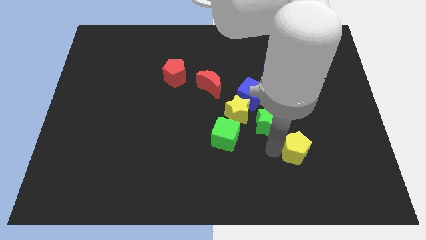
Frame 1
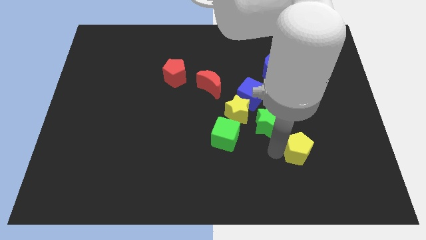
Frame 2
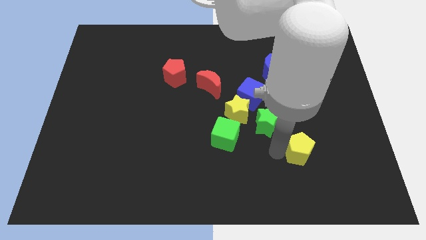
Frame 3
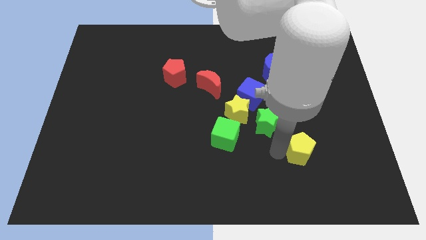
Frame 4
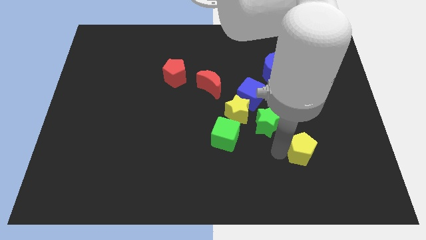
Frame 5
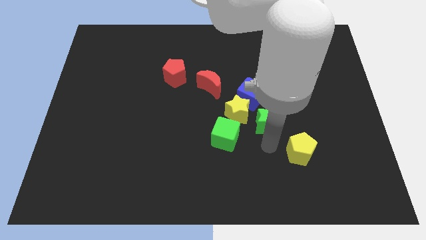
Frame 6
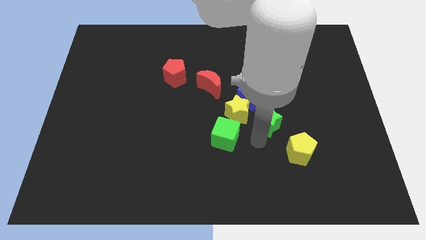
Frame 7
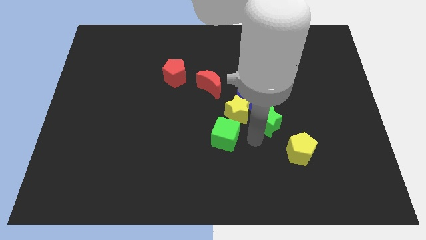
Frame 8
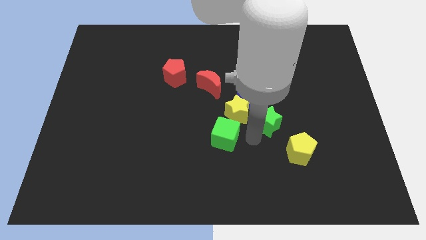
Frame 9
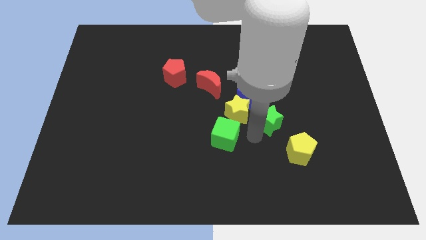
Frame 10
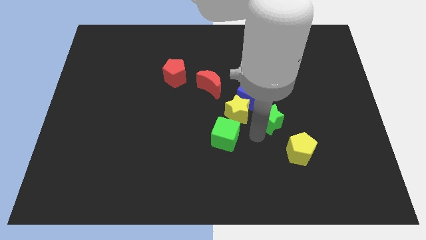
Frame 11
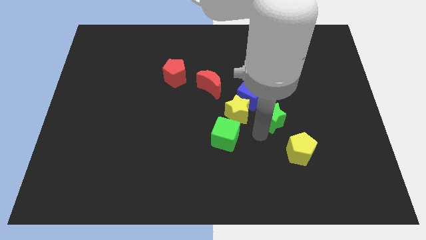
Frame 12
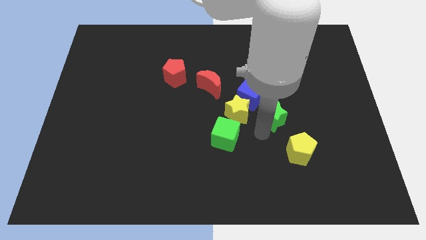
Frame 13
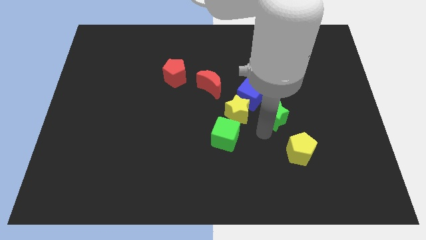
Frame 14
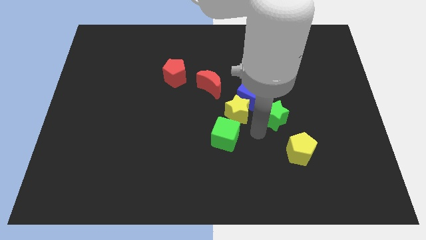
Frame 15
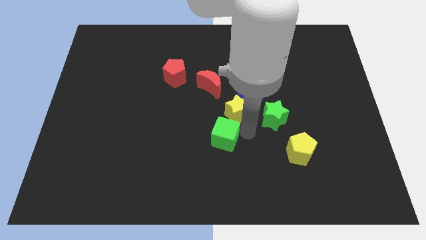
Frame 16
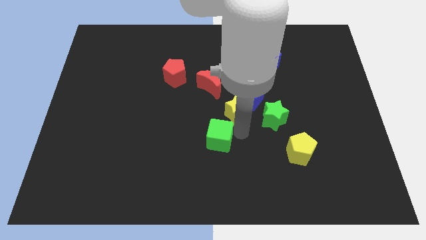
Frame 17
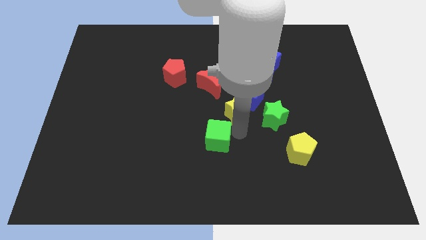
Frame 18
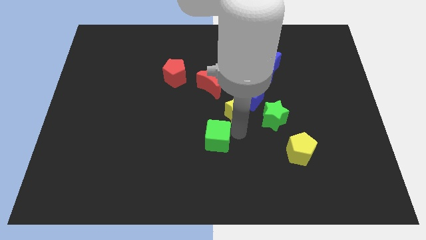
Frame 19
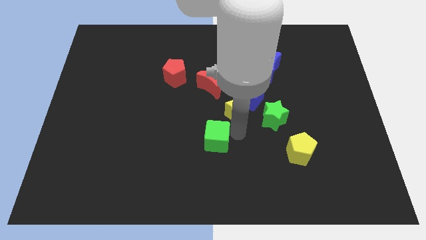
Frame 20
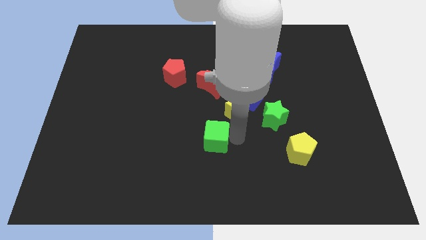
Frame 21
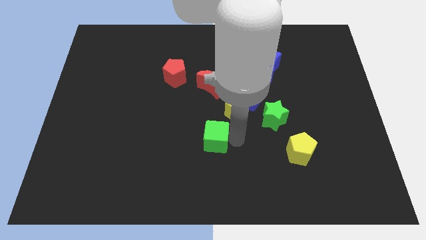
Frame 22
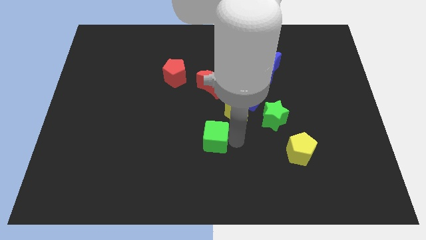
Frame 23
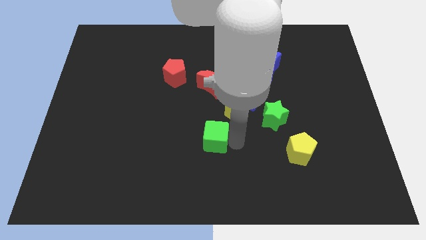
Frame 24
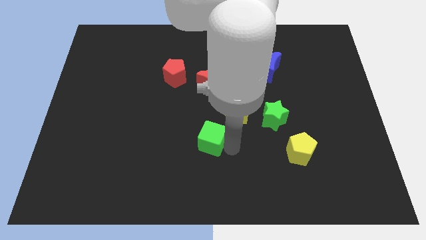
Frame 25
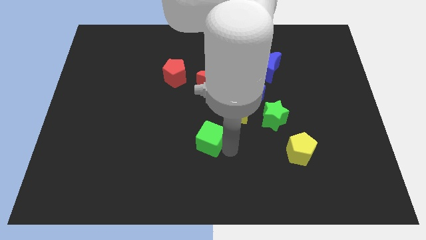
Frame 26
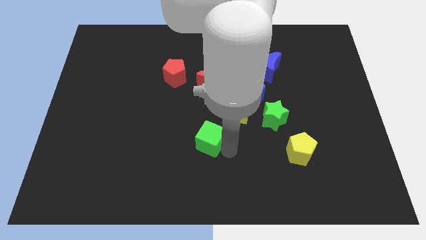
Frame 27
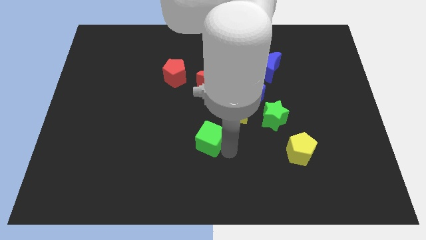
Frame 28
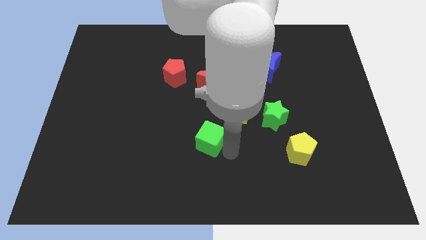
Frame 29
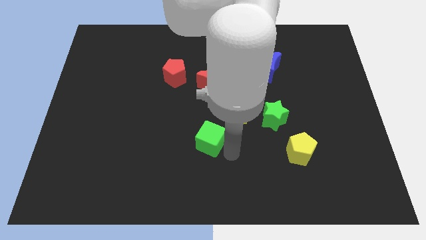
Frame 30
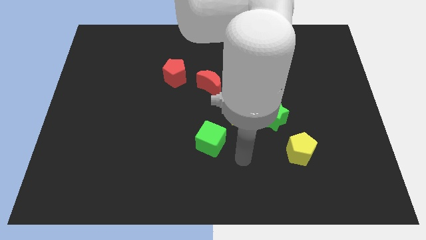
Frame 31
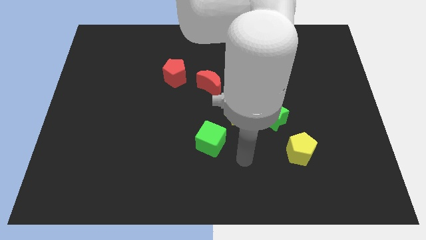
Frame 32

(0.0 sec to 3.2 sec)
place your arm in between the green cube and yellow pentagon

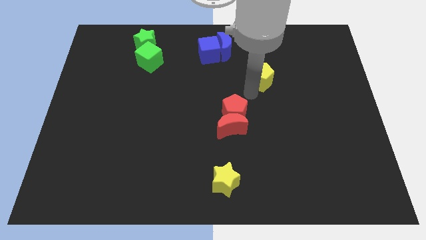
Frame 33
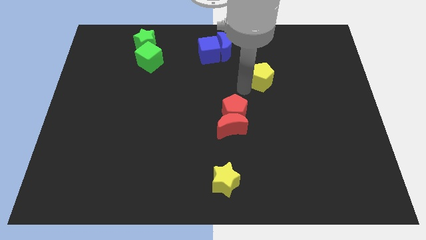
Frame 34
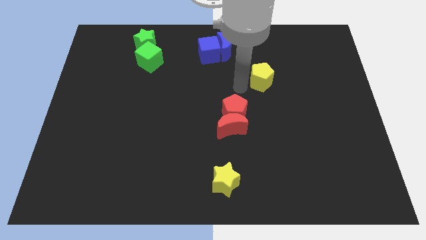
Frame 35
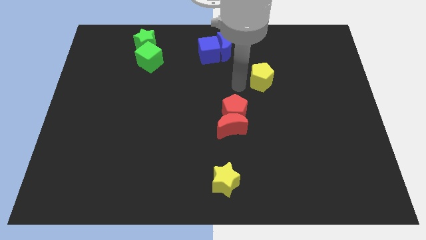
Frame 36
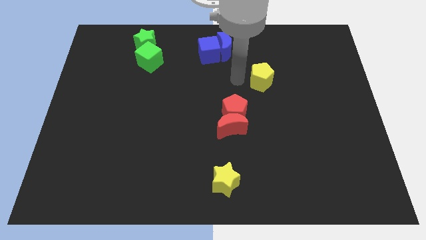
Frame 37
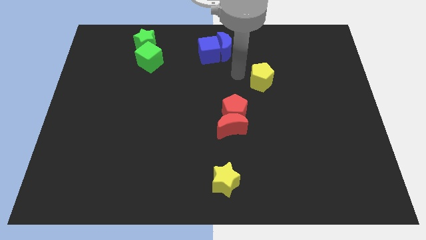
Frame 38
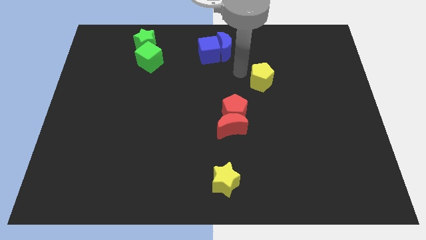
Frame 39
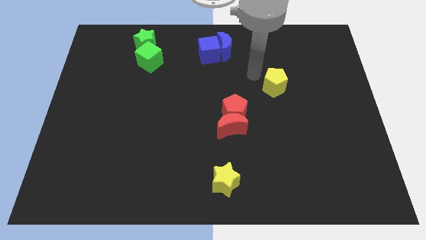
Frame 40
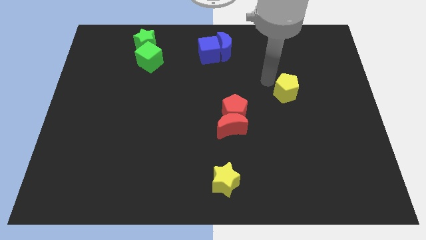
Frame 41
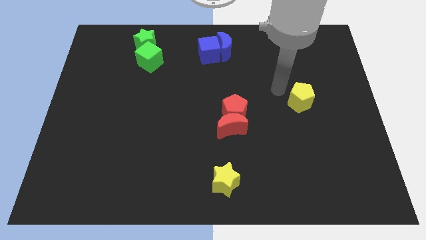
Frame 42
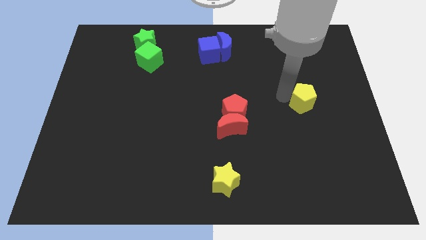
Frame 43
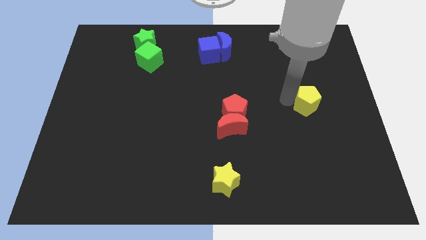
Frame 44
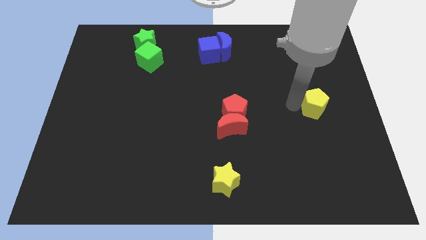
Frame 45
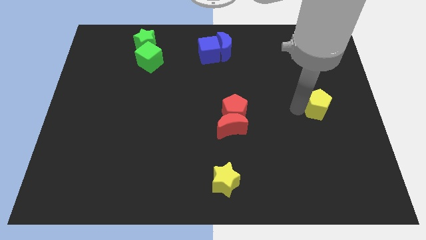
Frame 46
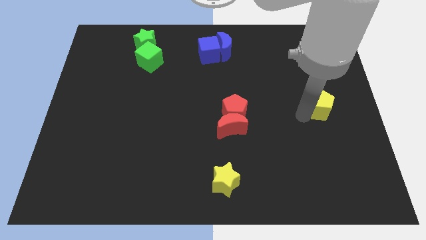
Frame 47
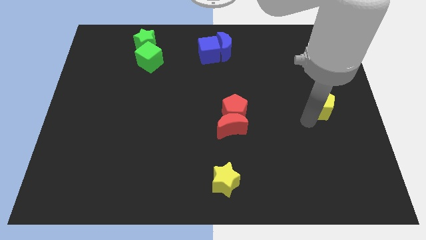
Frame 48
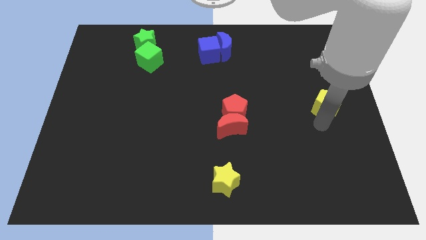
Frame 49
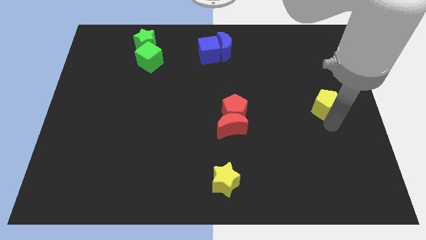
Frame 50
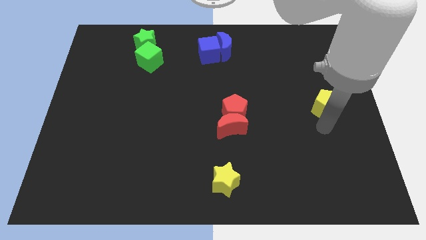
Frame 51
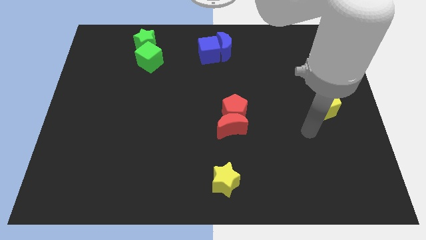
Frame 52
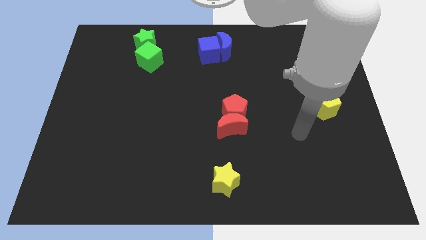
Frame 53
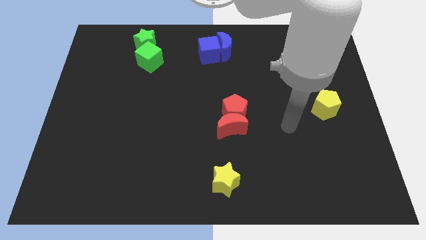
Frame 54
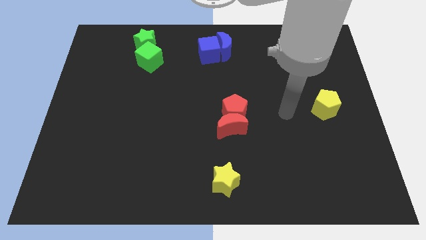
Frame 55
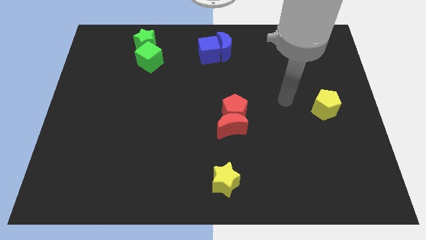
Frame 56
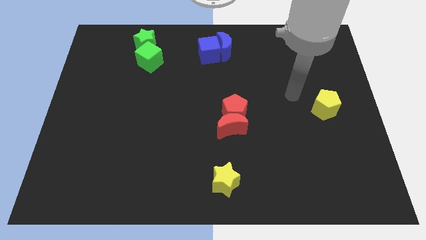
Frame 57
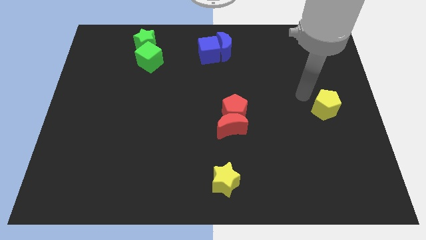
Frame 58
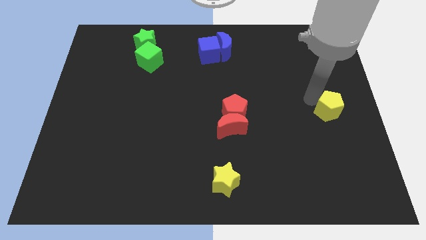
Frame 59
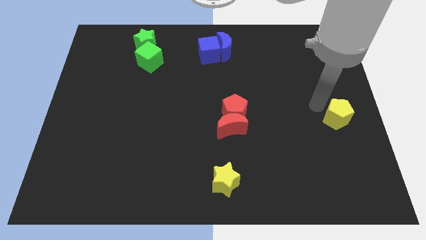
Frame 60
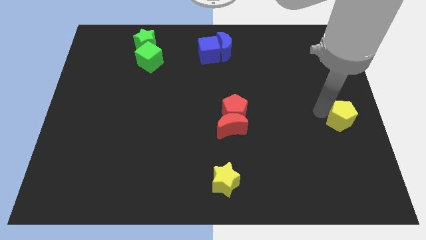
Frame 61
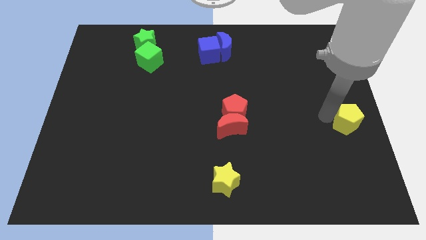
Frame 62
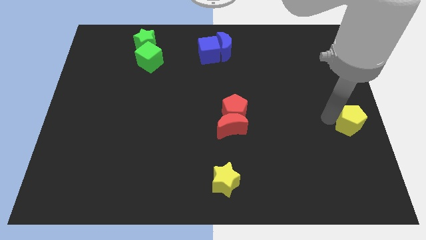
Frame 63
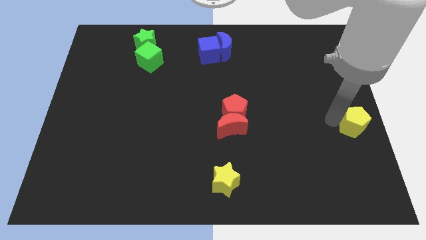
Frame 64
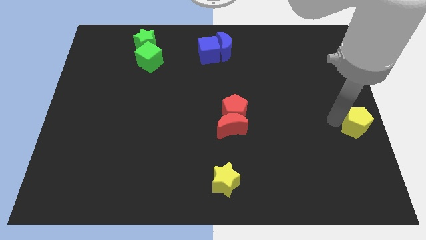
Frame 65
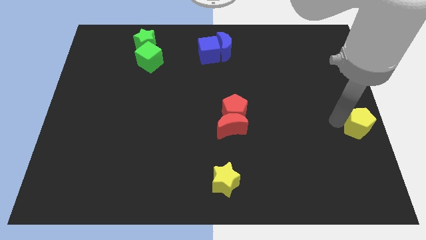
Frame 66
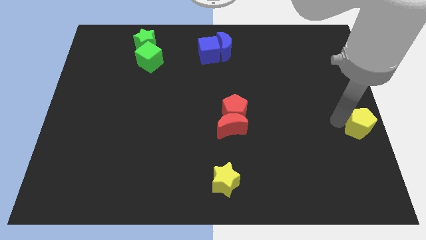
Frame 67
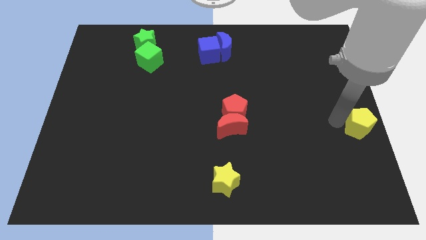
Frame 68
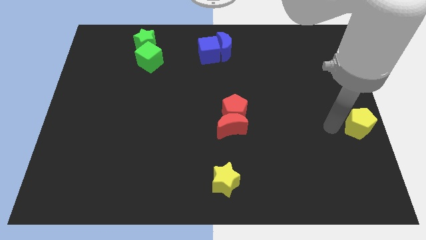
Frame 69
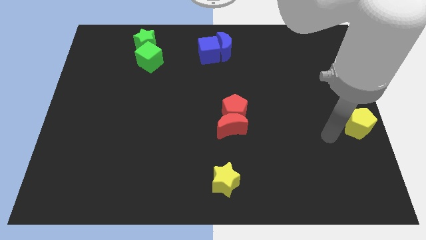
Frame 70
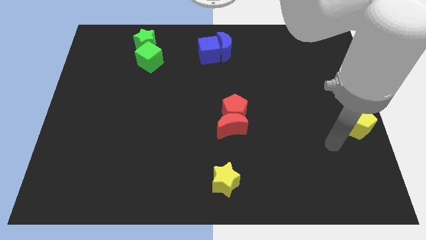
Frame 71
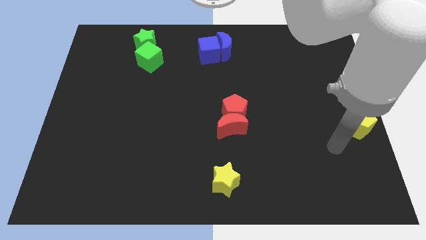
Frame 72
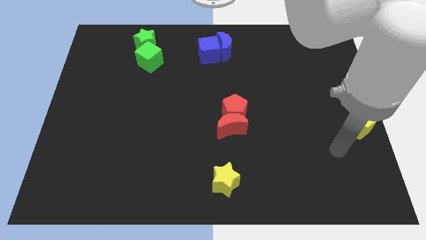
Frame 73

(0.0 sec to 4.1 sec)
slide the yellow pentagon to the right center of the board

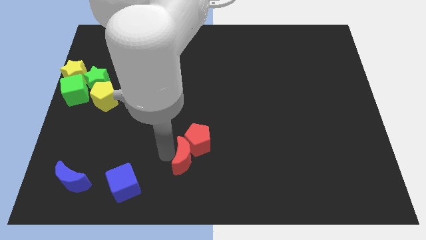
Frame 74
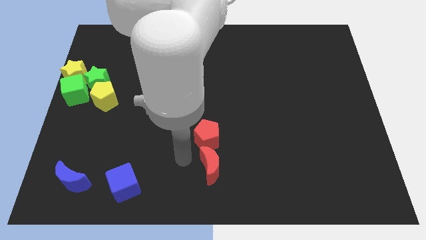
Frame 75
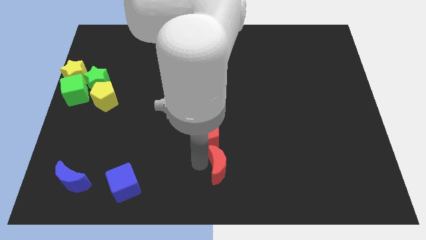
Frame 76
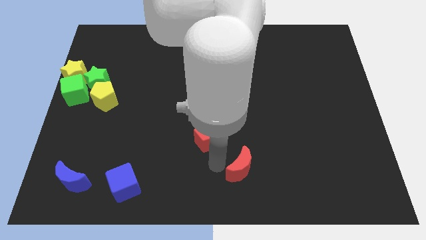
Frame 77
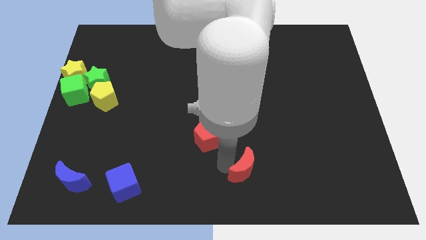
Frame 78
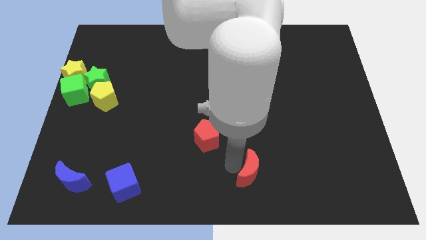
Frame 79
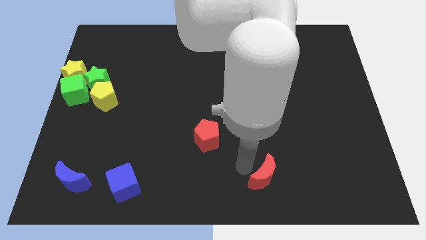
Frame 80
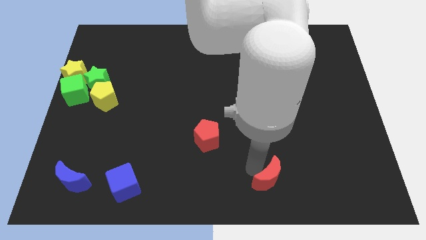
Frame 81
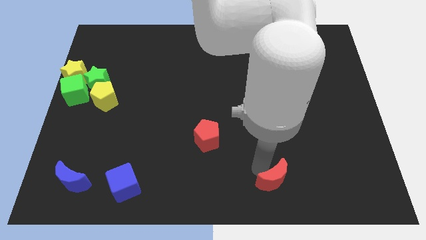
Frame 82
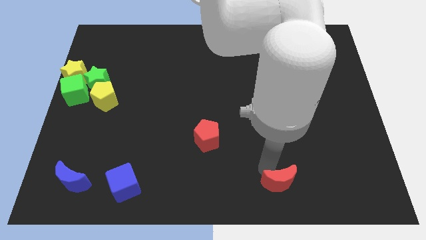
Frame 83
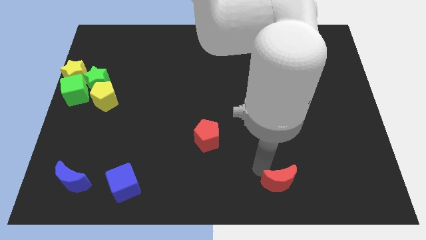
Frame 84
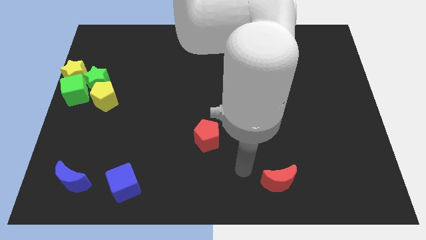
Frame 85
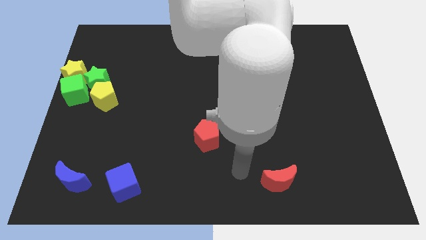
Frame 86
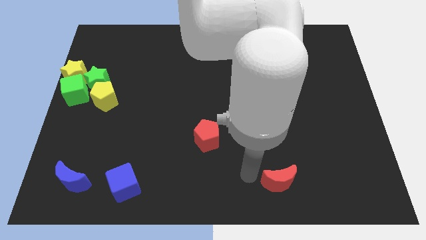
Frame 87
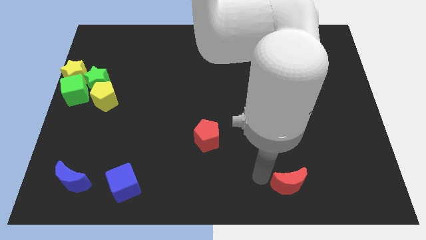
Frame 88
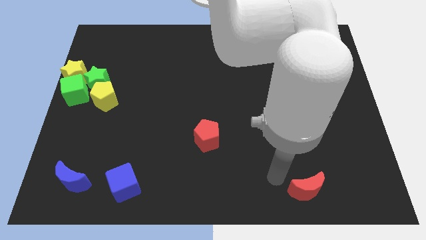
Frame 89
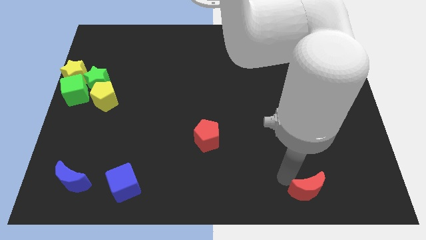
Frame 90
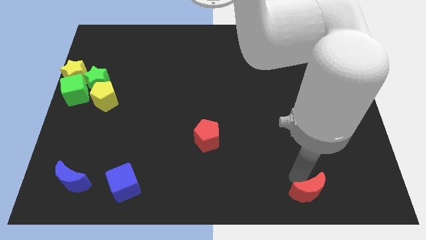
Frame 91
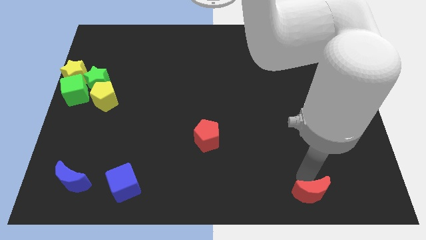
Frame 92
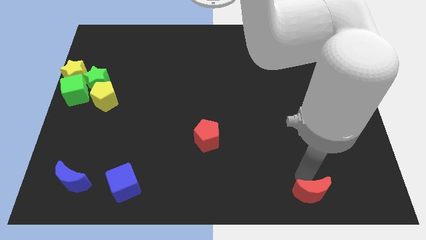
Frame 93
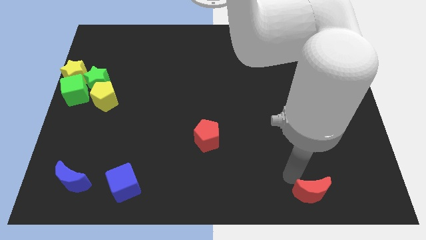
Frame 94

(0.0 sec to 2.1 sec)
separate the red moon from the red pentagon
